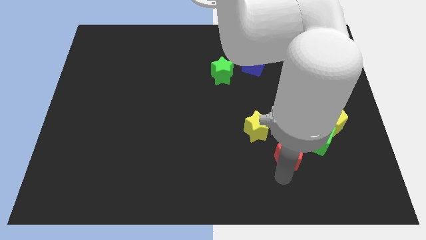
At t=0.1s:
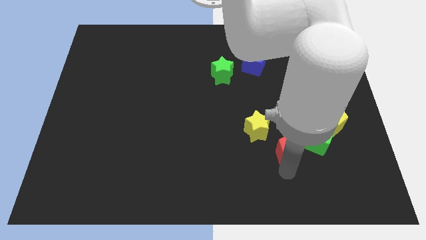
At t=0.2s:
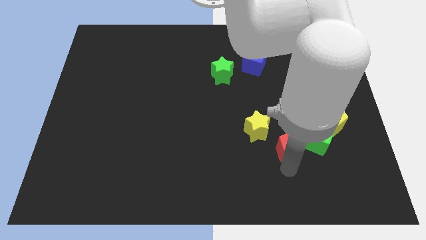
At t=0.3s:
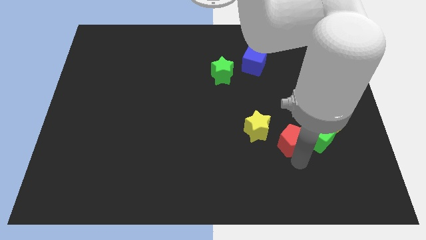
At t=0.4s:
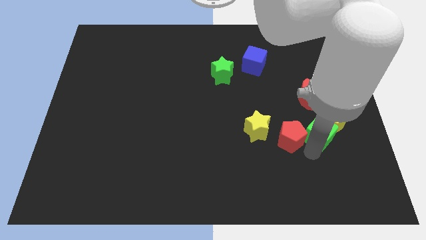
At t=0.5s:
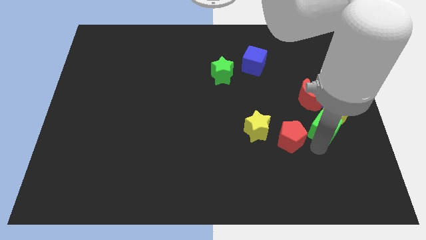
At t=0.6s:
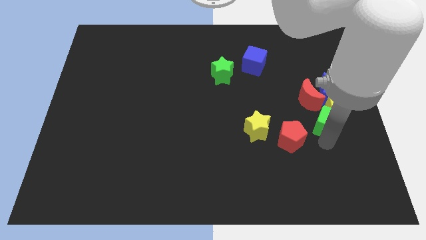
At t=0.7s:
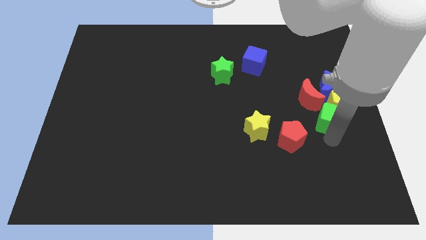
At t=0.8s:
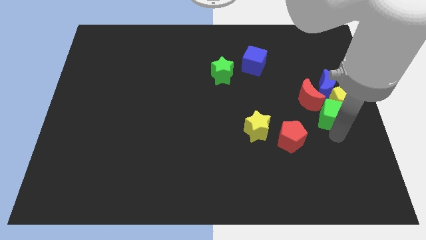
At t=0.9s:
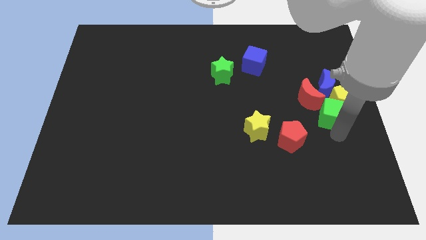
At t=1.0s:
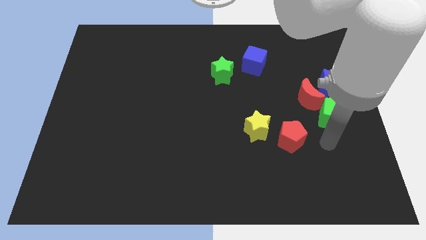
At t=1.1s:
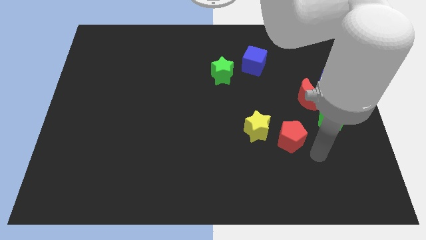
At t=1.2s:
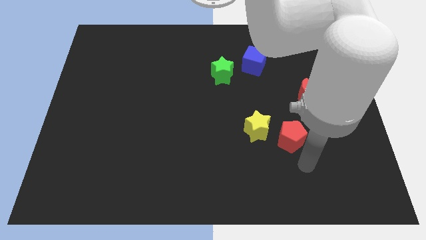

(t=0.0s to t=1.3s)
push the green cube into the yellow pentagon

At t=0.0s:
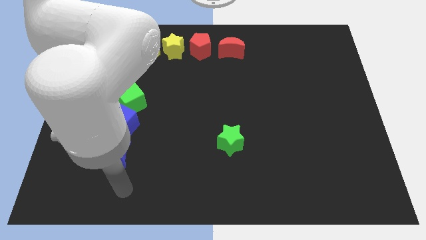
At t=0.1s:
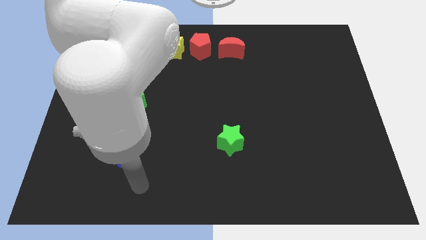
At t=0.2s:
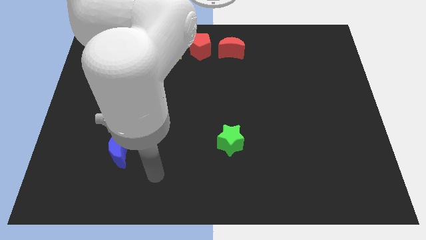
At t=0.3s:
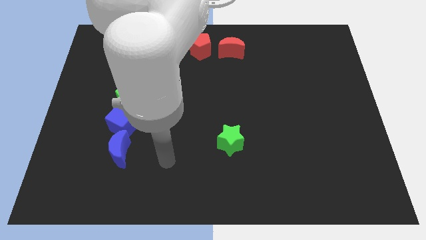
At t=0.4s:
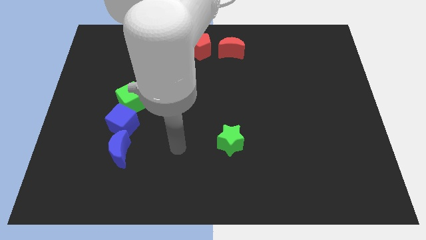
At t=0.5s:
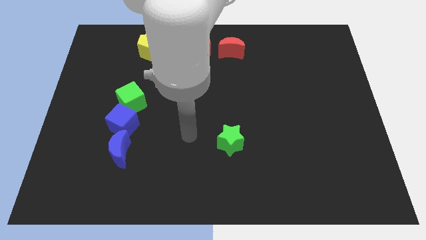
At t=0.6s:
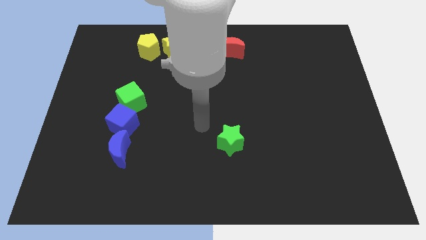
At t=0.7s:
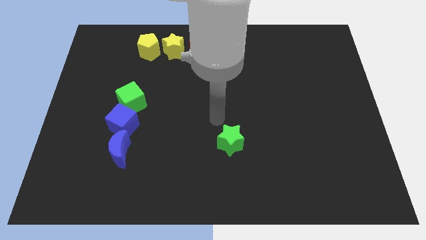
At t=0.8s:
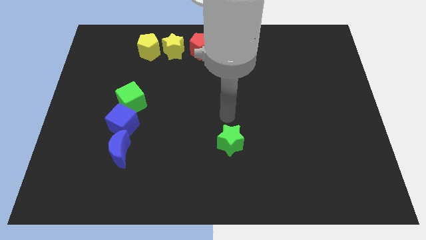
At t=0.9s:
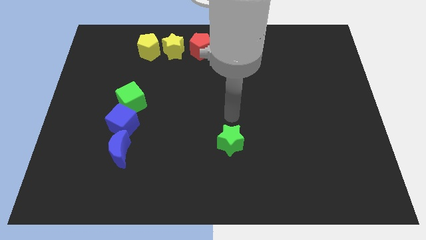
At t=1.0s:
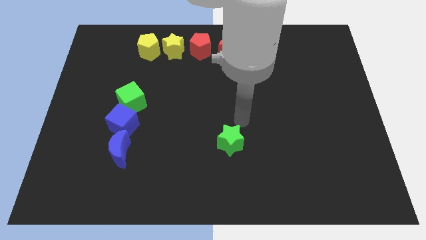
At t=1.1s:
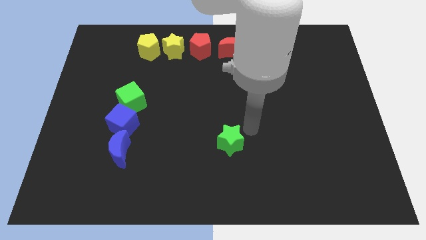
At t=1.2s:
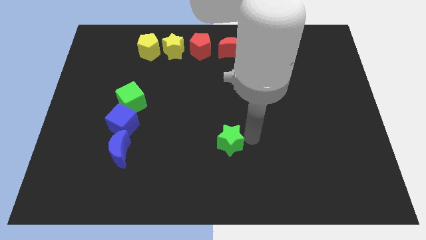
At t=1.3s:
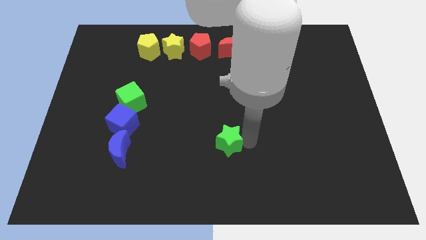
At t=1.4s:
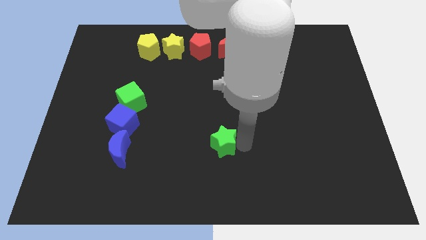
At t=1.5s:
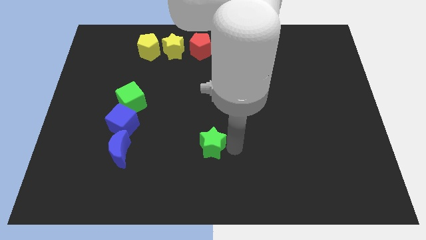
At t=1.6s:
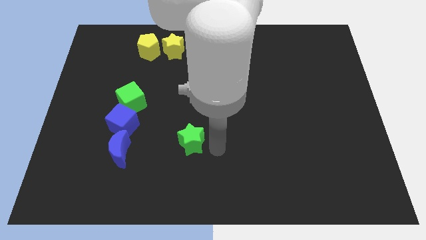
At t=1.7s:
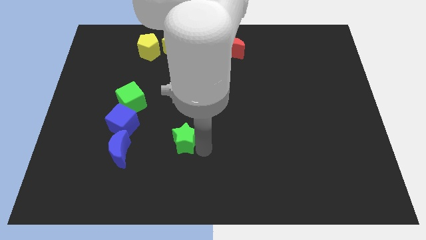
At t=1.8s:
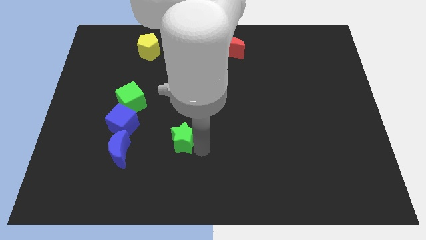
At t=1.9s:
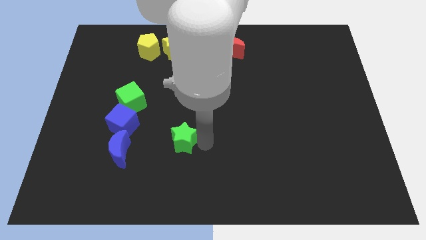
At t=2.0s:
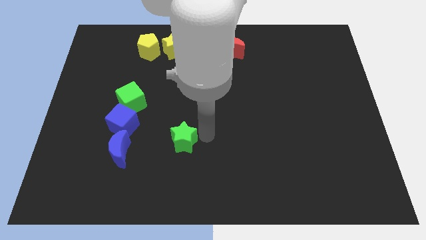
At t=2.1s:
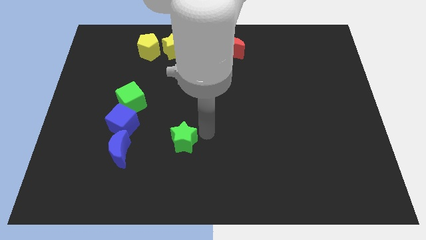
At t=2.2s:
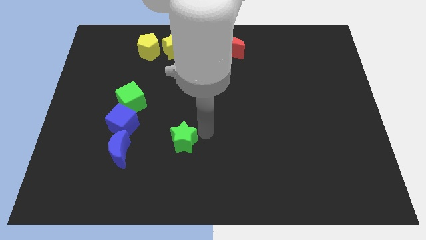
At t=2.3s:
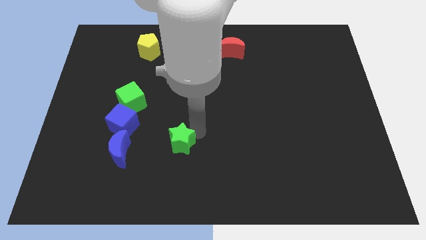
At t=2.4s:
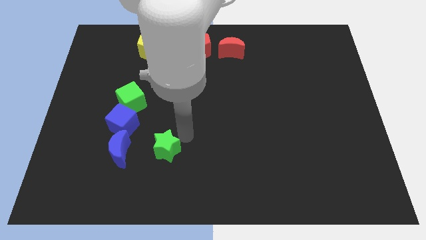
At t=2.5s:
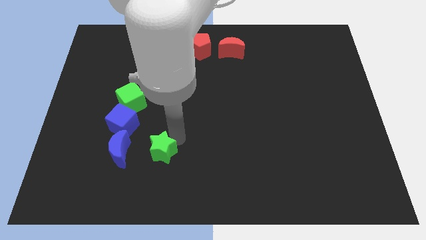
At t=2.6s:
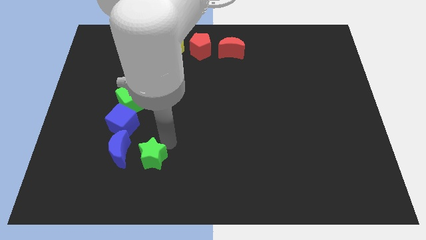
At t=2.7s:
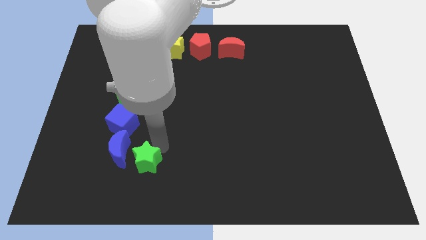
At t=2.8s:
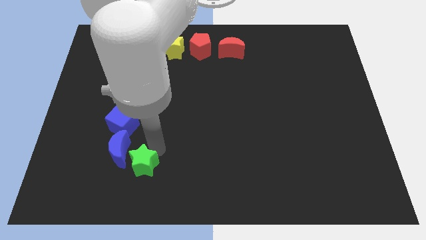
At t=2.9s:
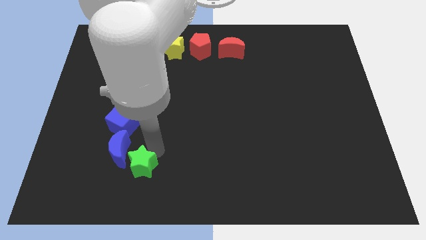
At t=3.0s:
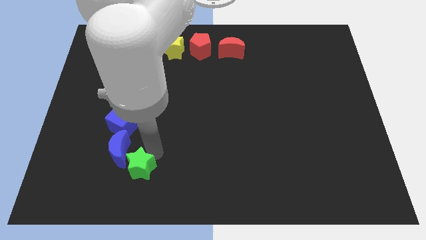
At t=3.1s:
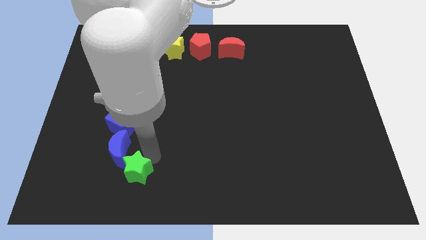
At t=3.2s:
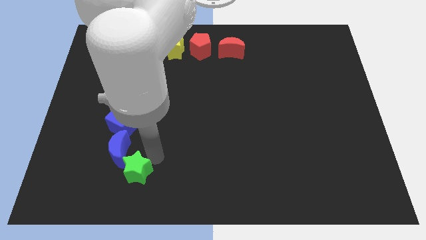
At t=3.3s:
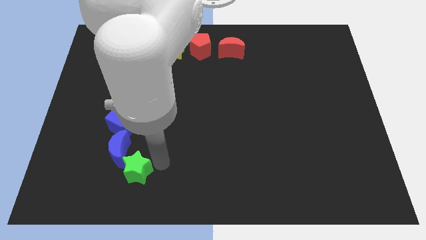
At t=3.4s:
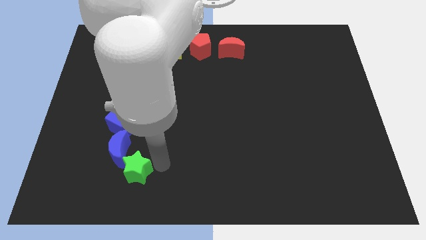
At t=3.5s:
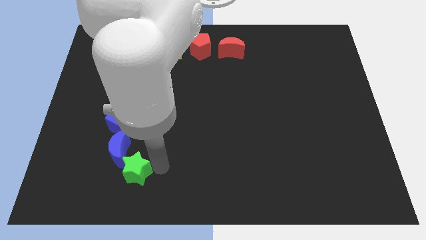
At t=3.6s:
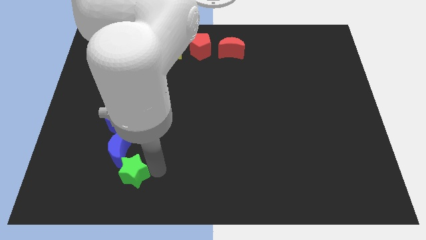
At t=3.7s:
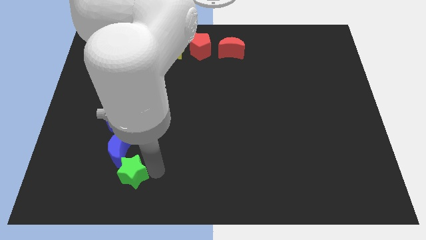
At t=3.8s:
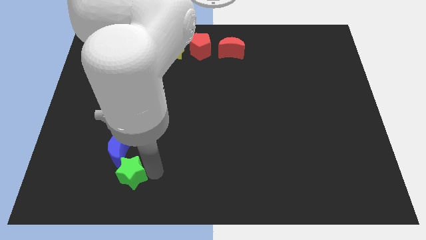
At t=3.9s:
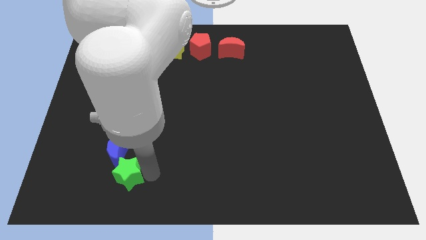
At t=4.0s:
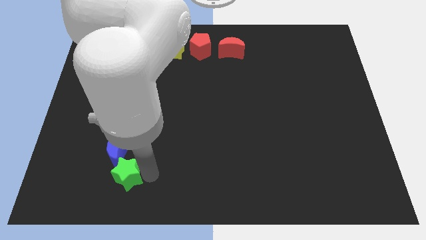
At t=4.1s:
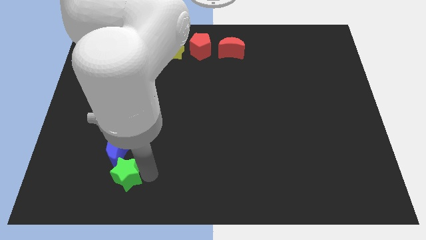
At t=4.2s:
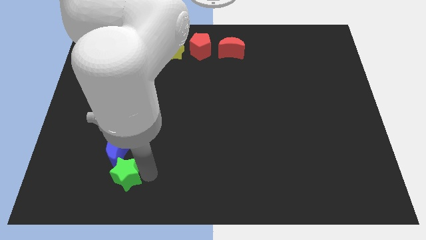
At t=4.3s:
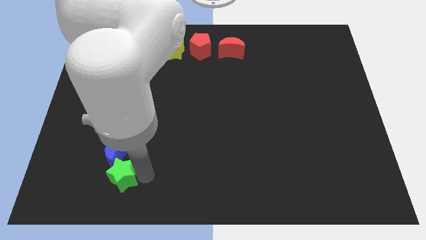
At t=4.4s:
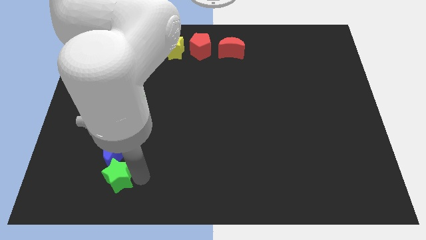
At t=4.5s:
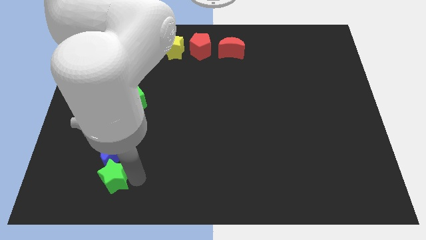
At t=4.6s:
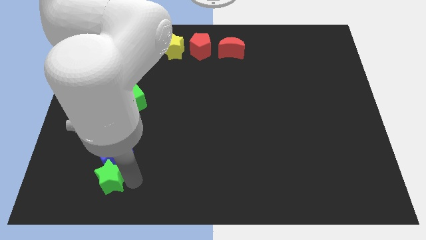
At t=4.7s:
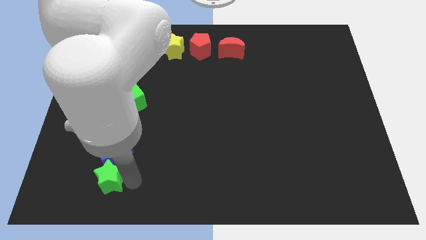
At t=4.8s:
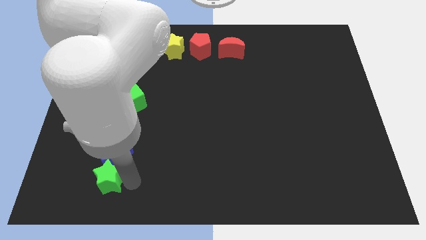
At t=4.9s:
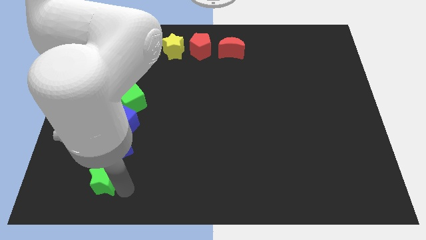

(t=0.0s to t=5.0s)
move the green star below the blue crescent

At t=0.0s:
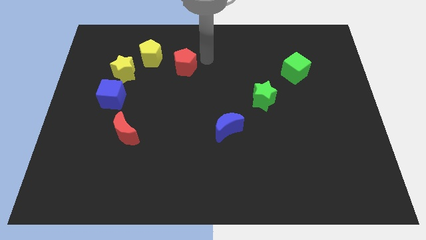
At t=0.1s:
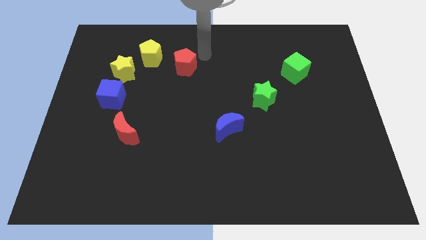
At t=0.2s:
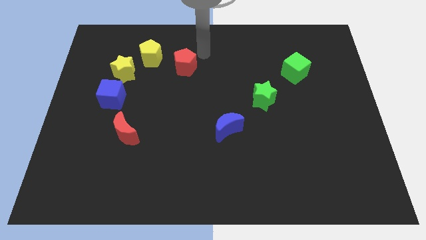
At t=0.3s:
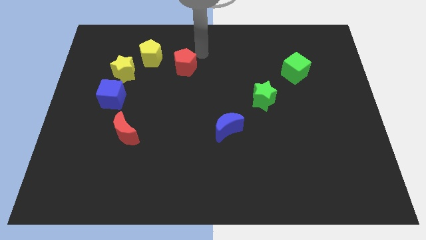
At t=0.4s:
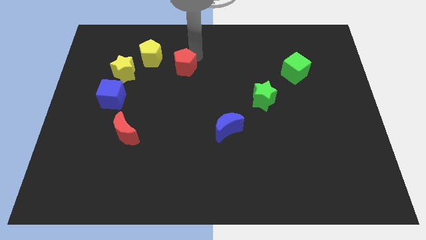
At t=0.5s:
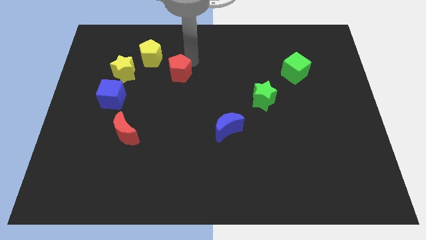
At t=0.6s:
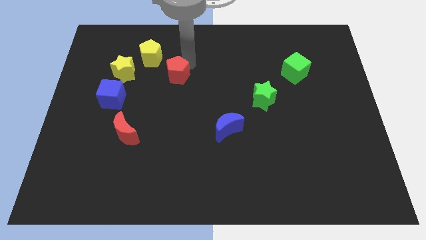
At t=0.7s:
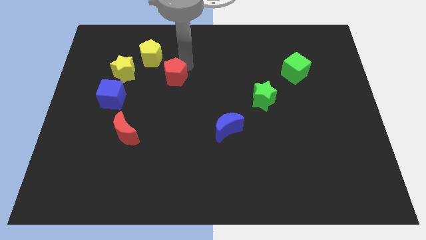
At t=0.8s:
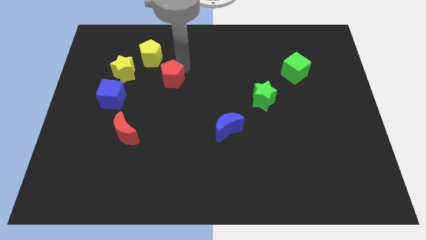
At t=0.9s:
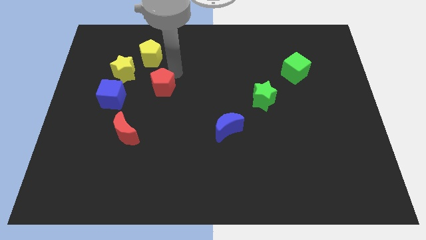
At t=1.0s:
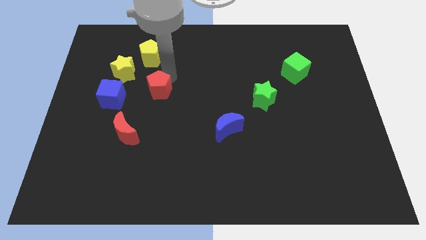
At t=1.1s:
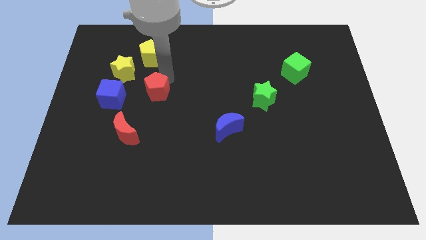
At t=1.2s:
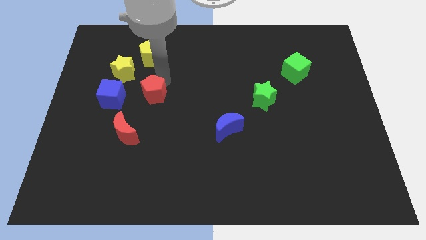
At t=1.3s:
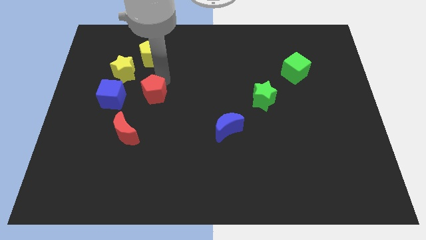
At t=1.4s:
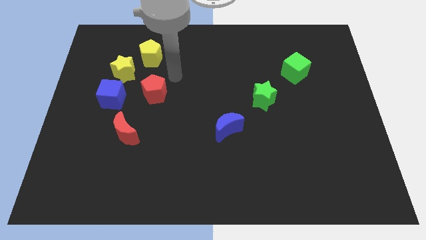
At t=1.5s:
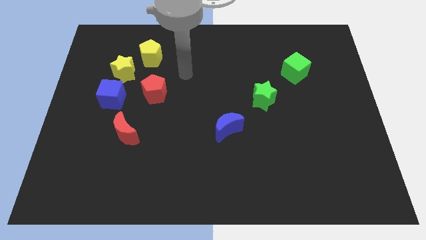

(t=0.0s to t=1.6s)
push the red pentagon below yellow pentagon

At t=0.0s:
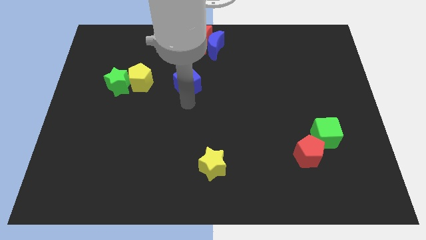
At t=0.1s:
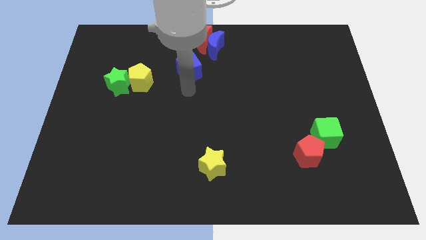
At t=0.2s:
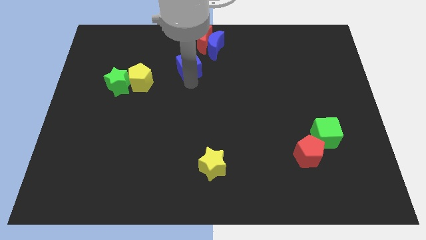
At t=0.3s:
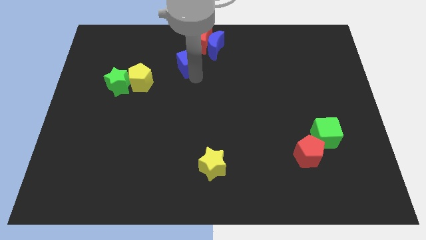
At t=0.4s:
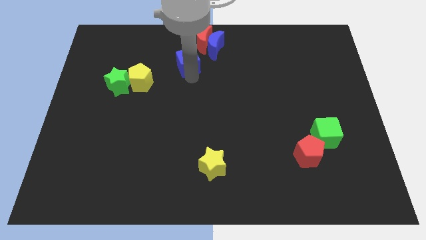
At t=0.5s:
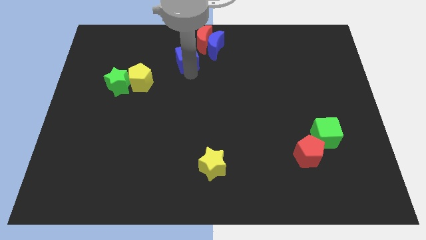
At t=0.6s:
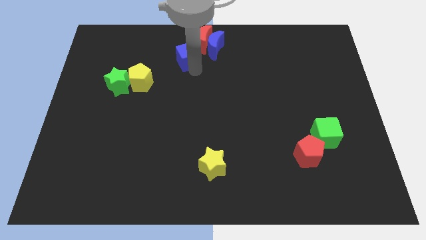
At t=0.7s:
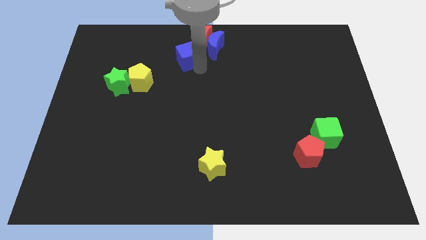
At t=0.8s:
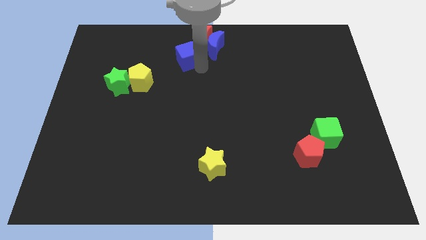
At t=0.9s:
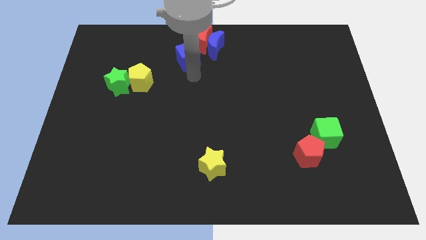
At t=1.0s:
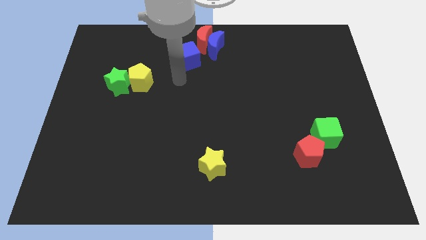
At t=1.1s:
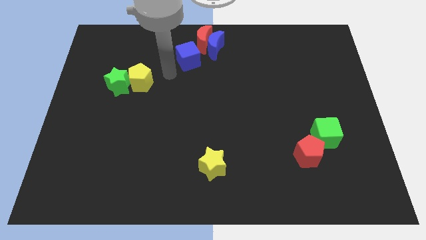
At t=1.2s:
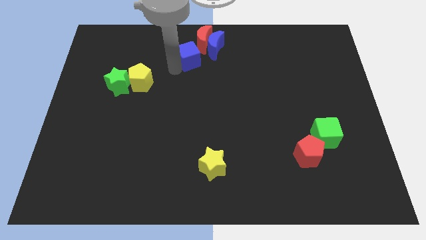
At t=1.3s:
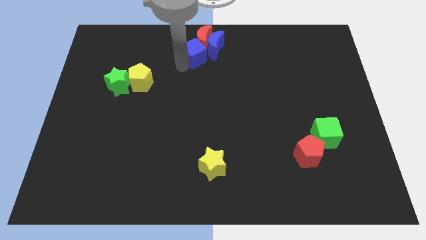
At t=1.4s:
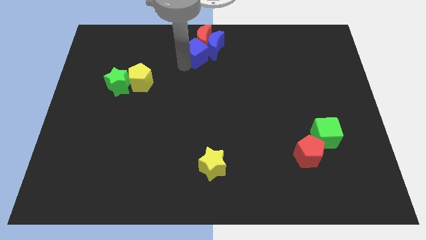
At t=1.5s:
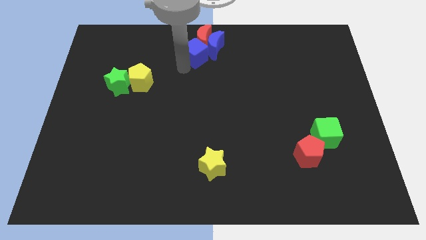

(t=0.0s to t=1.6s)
push the blue cube to the bottom of the red moon
